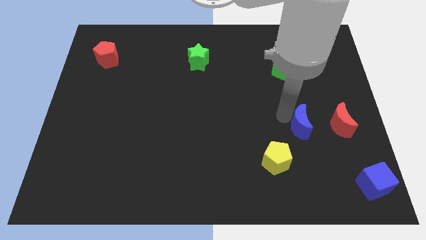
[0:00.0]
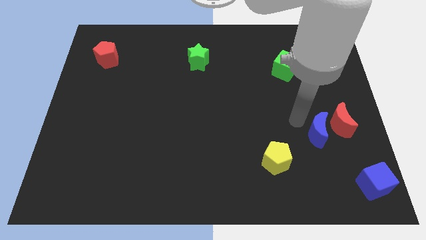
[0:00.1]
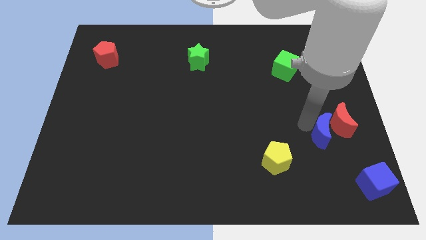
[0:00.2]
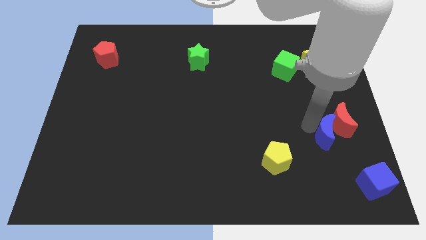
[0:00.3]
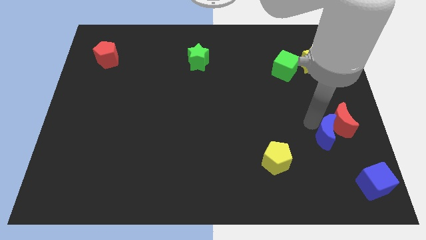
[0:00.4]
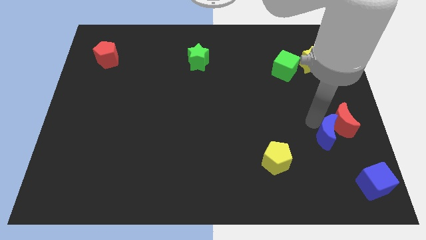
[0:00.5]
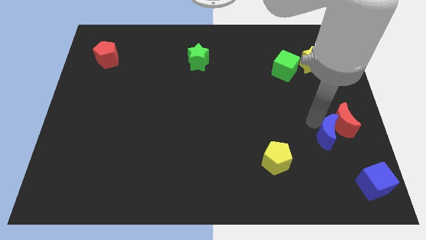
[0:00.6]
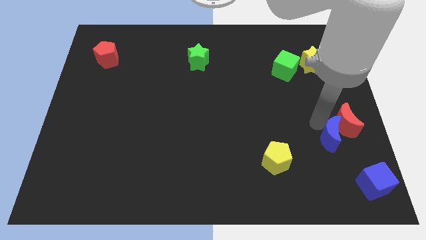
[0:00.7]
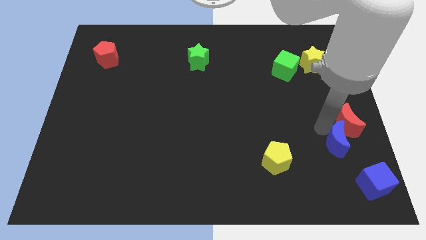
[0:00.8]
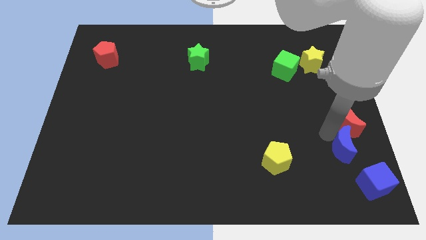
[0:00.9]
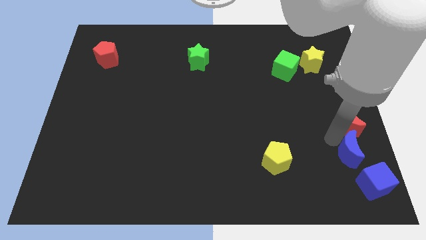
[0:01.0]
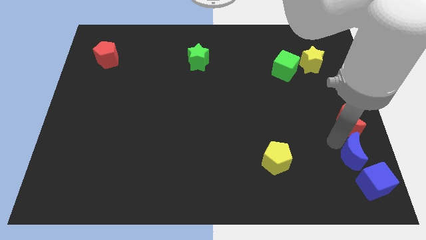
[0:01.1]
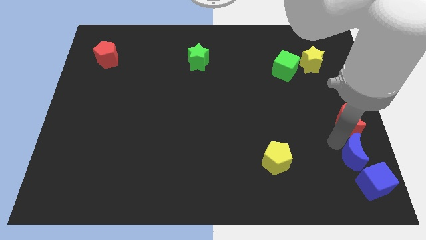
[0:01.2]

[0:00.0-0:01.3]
push the blue crescent to the bottom of the red crescent

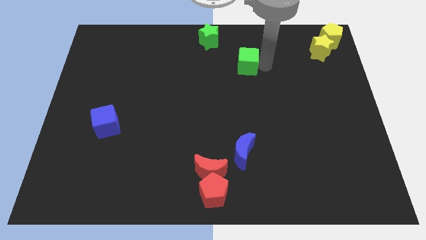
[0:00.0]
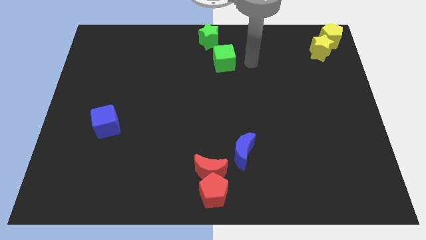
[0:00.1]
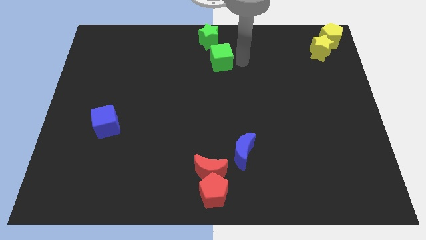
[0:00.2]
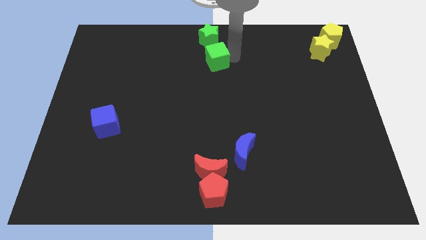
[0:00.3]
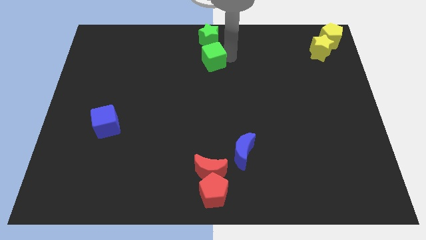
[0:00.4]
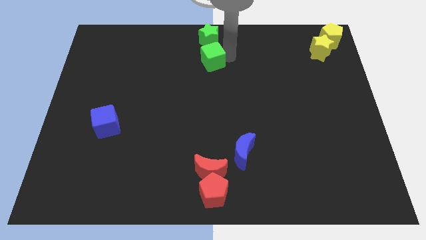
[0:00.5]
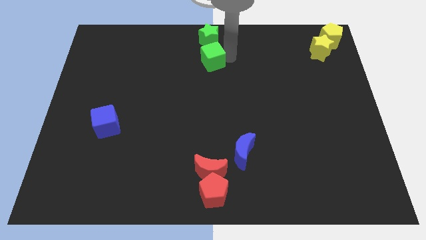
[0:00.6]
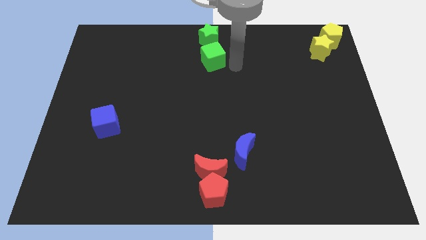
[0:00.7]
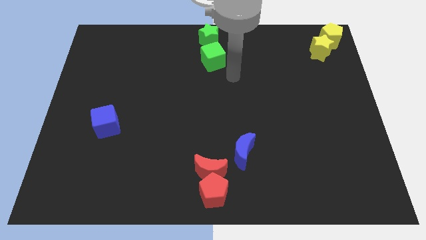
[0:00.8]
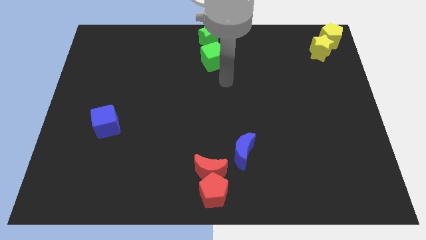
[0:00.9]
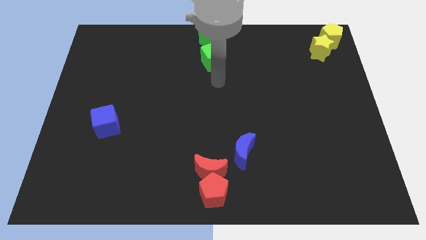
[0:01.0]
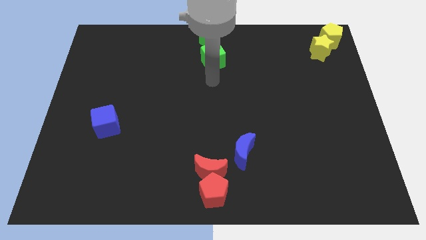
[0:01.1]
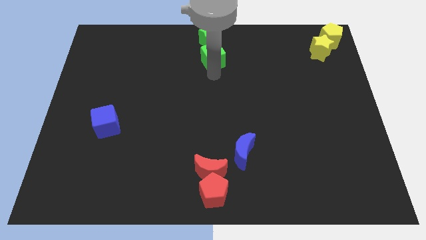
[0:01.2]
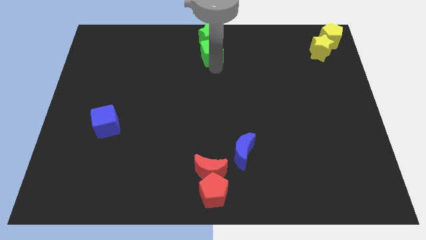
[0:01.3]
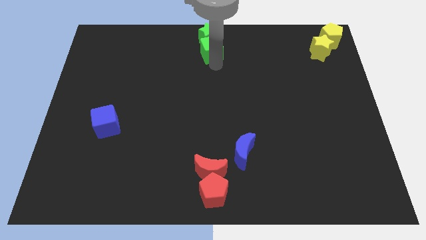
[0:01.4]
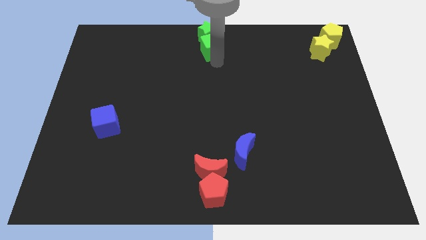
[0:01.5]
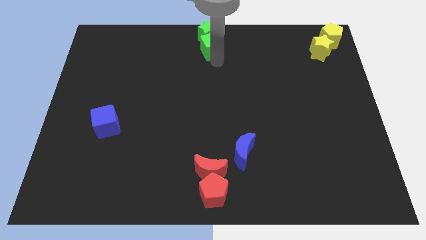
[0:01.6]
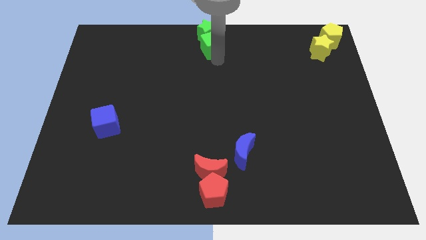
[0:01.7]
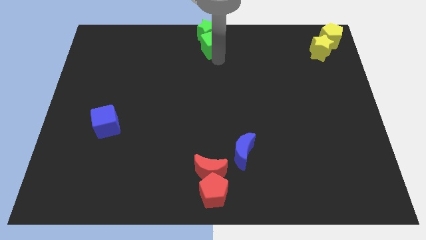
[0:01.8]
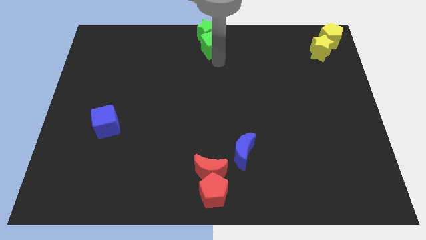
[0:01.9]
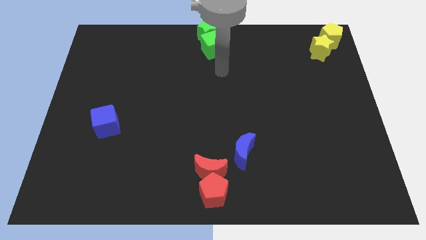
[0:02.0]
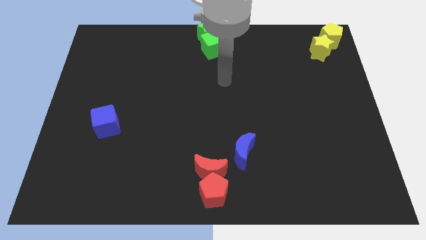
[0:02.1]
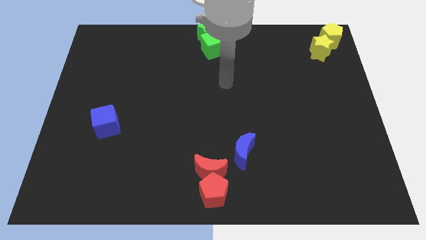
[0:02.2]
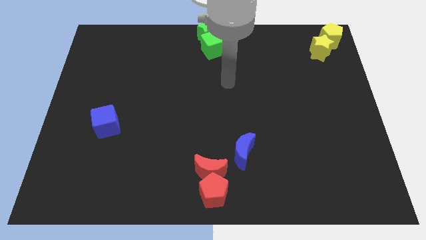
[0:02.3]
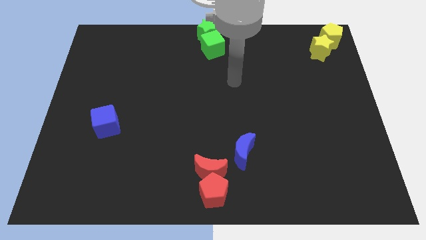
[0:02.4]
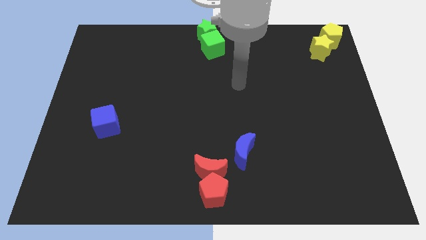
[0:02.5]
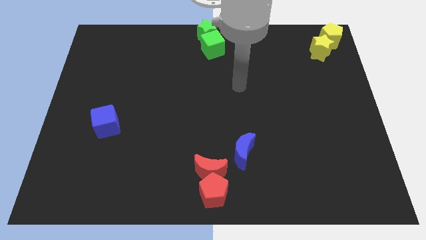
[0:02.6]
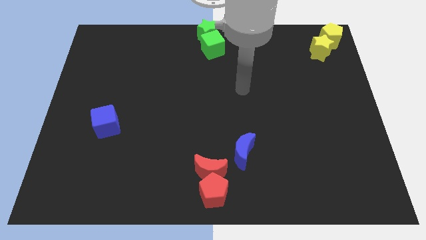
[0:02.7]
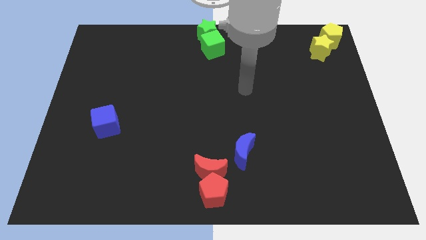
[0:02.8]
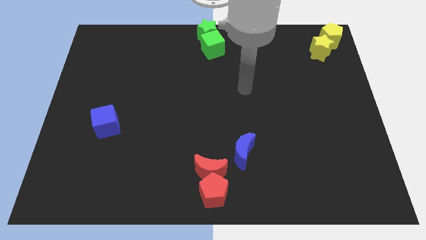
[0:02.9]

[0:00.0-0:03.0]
move the green cube towards the green star at the top center of the board

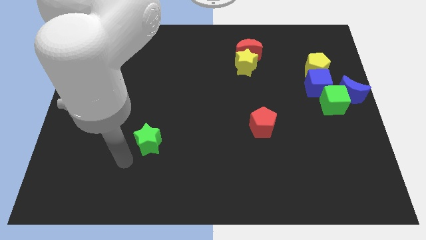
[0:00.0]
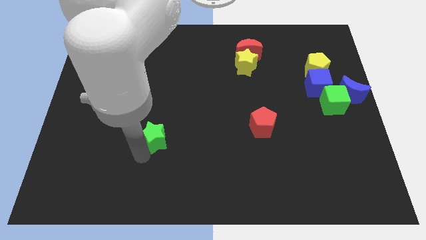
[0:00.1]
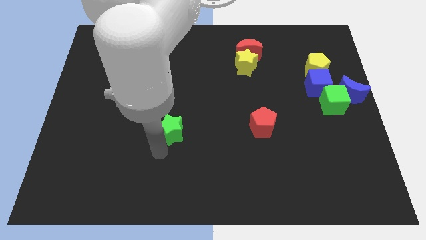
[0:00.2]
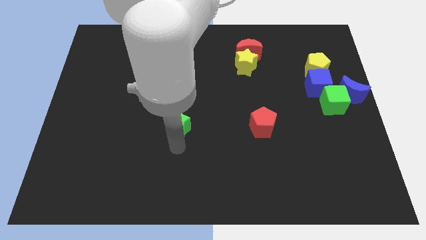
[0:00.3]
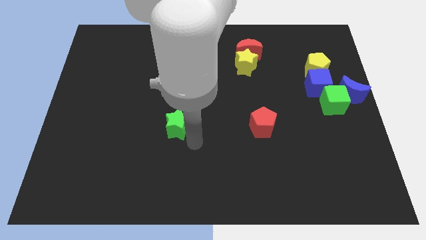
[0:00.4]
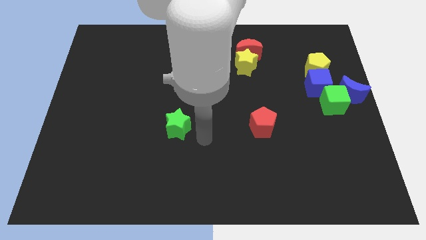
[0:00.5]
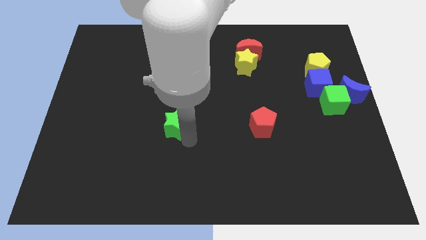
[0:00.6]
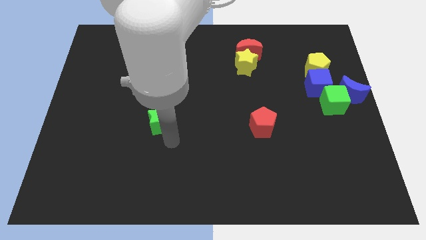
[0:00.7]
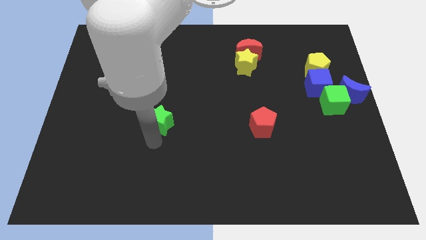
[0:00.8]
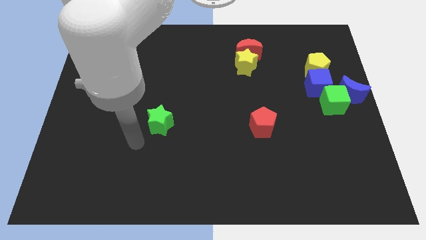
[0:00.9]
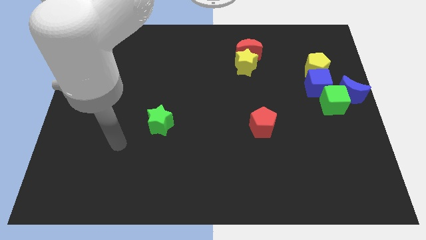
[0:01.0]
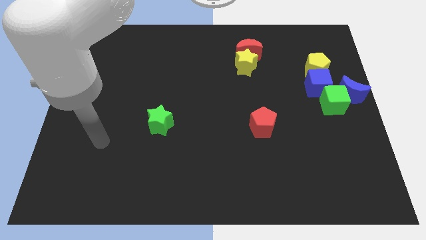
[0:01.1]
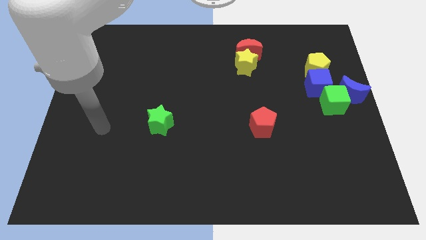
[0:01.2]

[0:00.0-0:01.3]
place the green star towards the left of the red pentagon

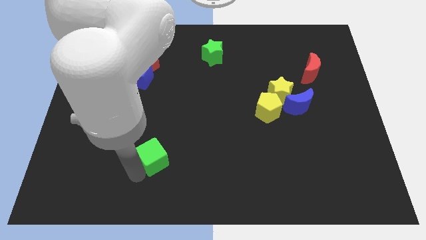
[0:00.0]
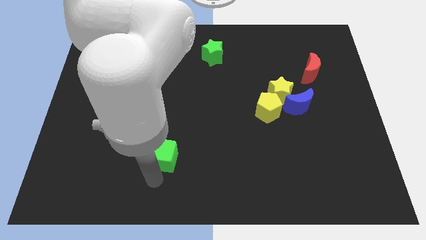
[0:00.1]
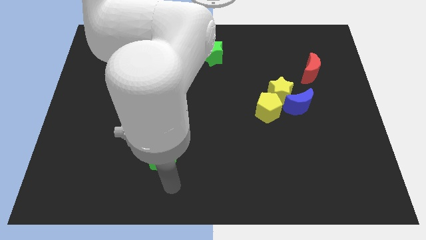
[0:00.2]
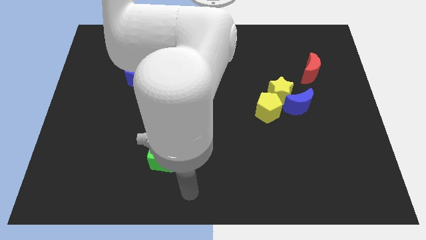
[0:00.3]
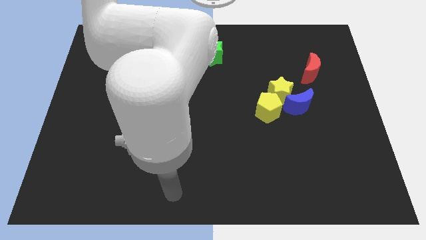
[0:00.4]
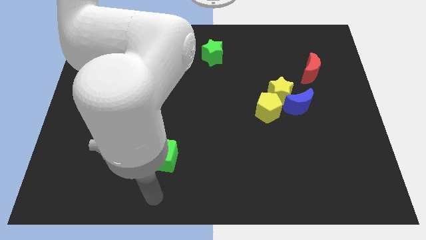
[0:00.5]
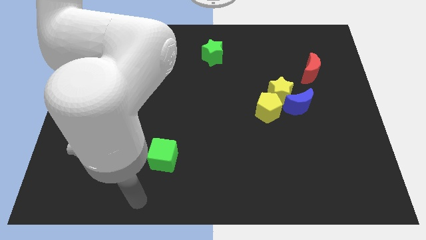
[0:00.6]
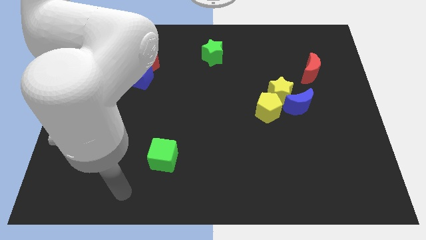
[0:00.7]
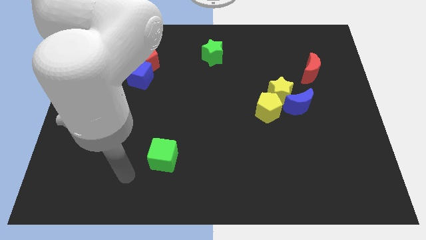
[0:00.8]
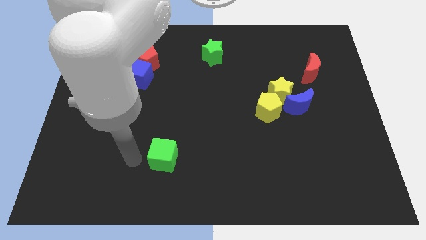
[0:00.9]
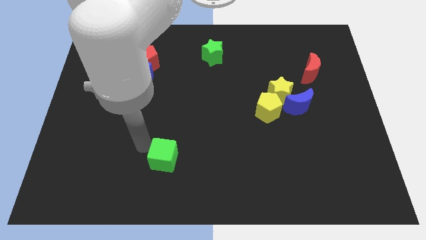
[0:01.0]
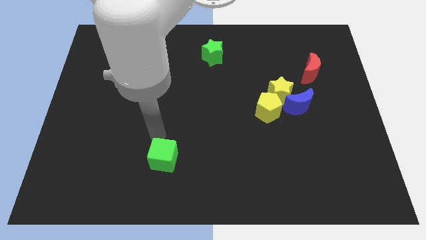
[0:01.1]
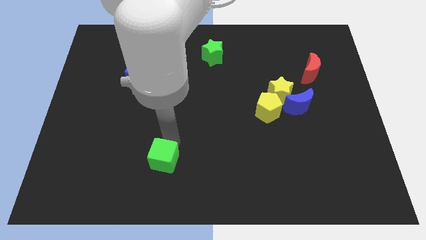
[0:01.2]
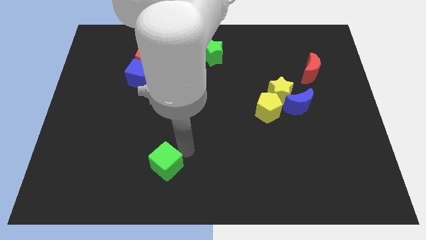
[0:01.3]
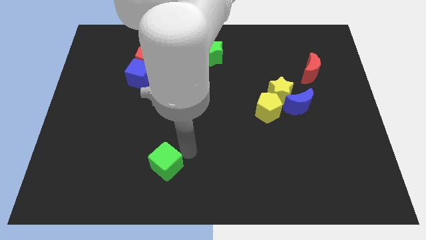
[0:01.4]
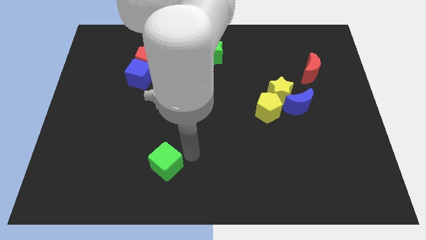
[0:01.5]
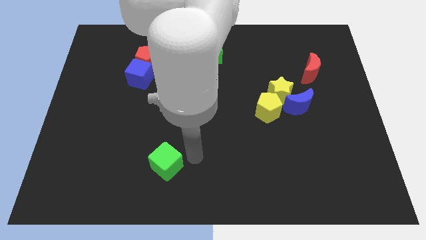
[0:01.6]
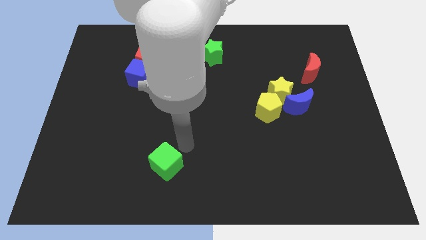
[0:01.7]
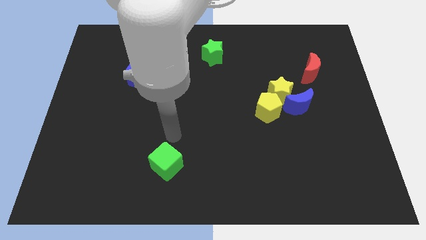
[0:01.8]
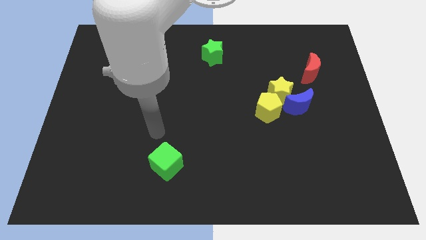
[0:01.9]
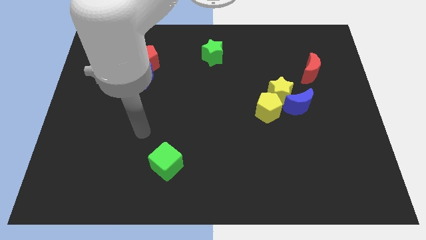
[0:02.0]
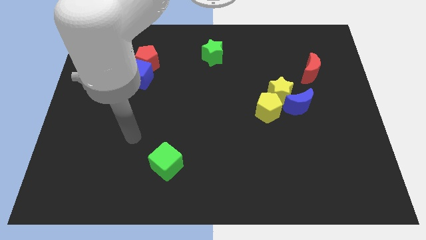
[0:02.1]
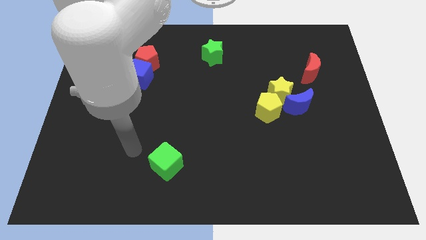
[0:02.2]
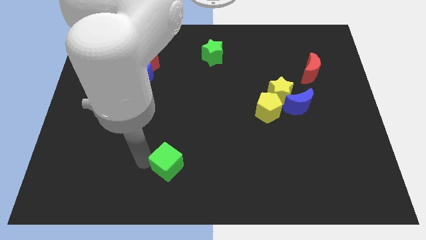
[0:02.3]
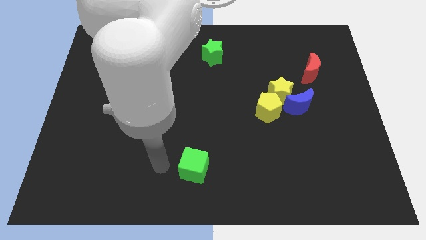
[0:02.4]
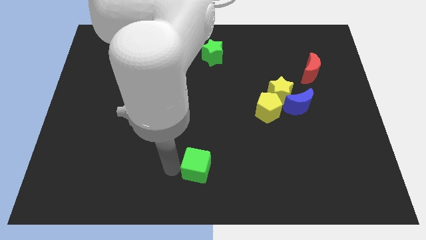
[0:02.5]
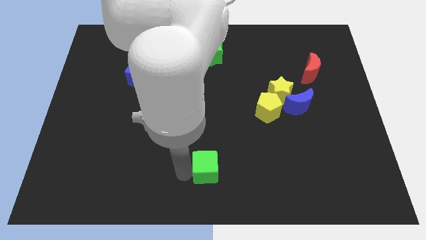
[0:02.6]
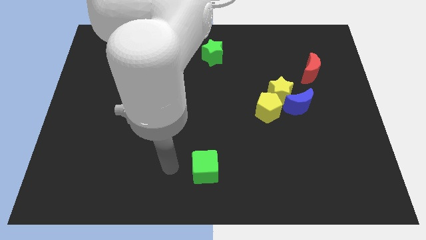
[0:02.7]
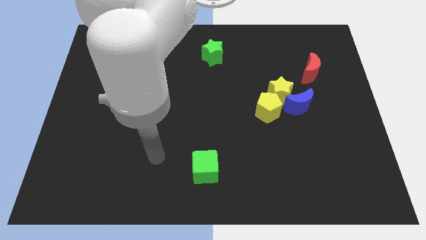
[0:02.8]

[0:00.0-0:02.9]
put green cube vertically below green star

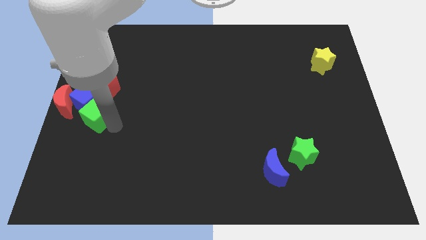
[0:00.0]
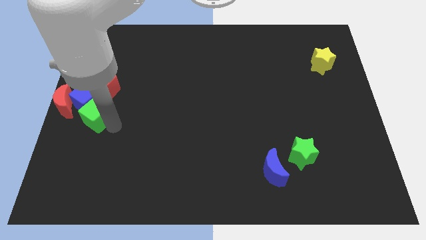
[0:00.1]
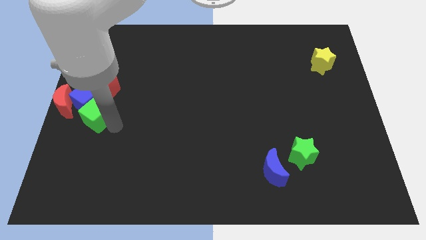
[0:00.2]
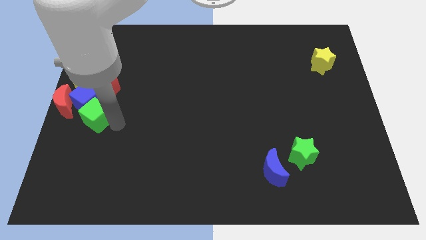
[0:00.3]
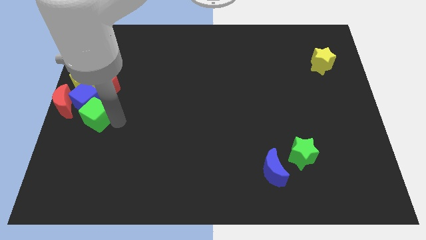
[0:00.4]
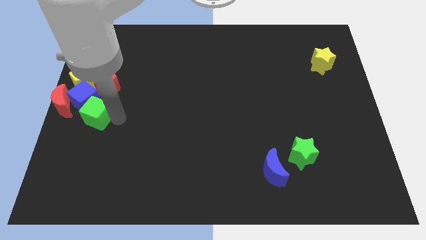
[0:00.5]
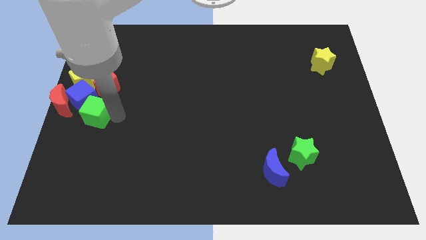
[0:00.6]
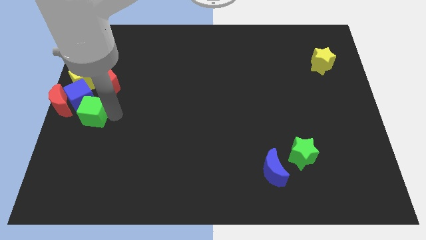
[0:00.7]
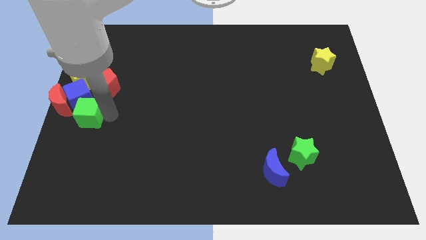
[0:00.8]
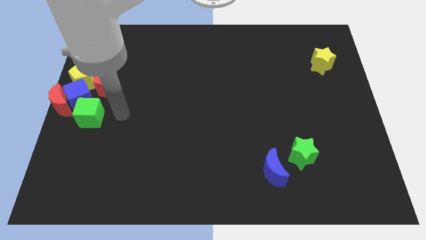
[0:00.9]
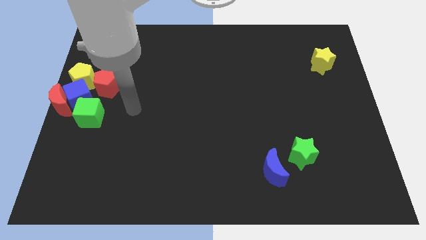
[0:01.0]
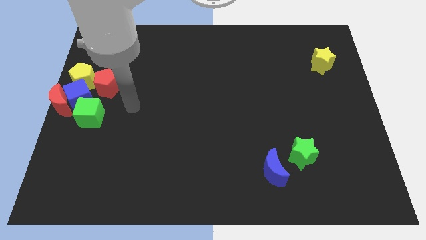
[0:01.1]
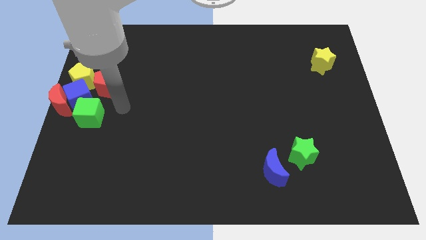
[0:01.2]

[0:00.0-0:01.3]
push the red crescent and blue cube with the green cube slightly to the left center of the board
